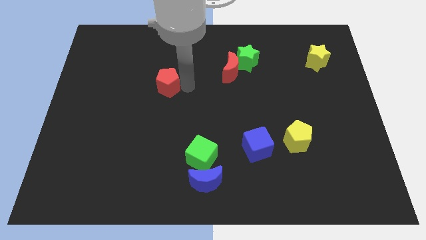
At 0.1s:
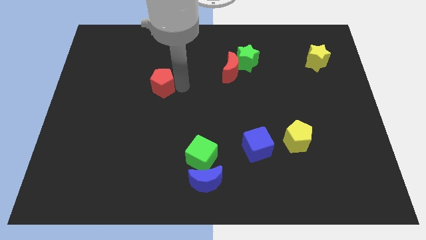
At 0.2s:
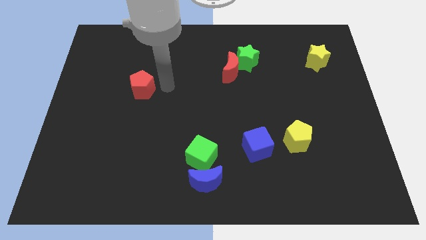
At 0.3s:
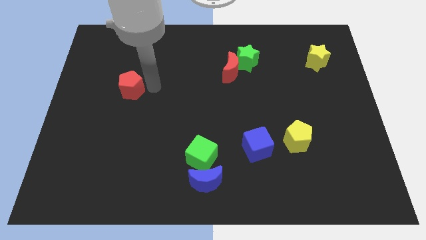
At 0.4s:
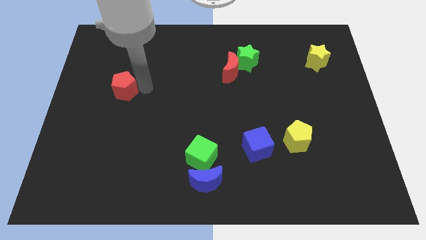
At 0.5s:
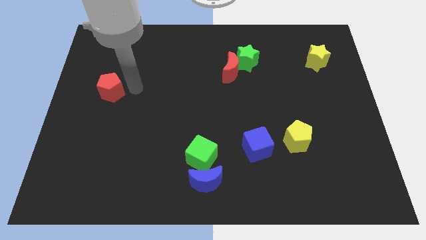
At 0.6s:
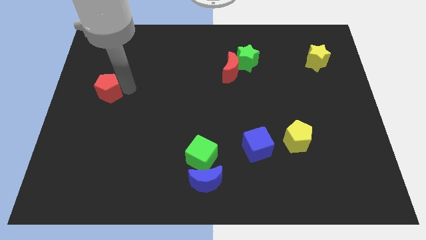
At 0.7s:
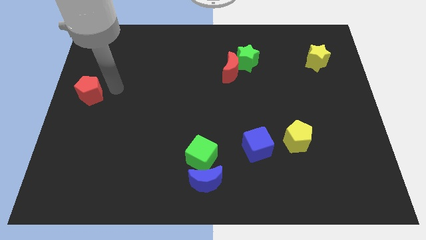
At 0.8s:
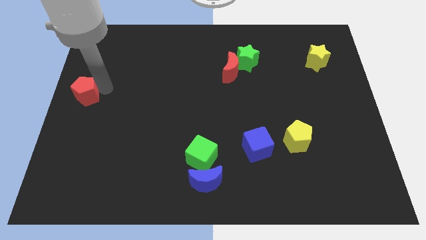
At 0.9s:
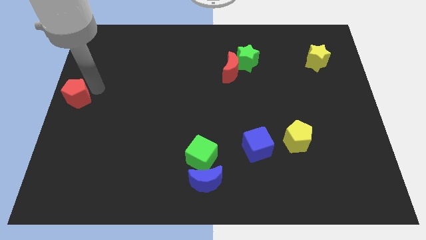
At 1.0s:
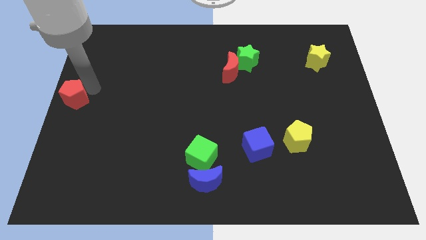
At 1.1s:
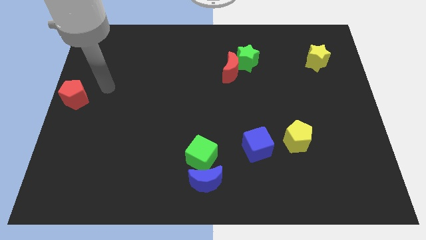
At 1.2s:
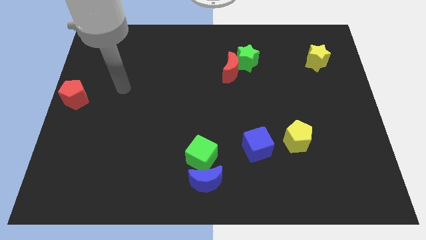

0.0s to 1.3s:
place red crescent towards left middle end of the board

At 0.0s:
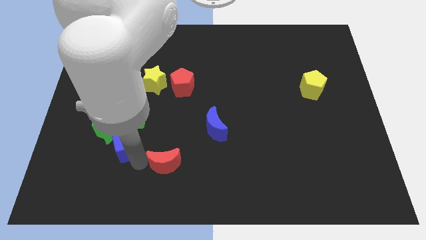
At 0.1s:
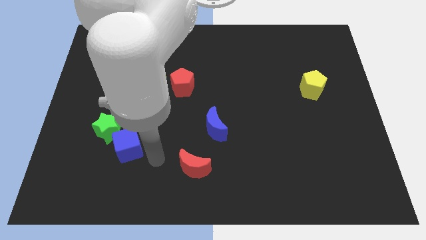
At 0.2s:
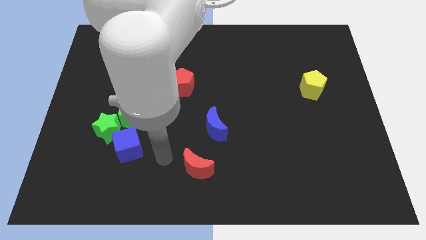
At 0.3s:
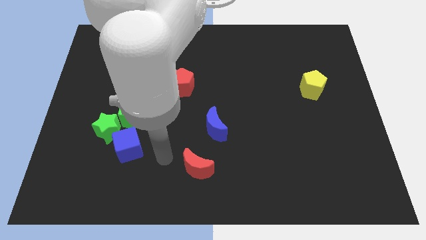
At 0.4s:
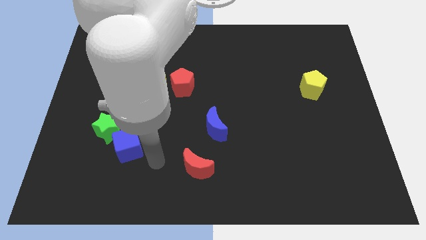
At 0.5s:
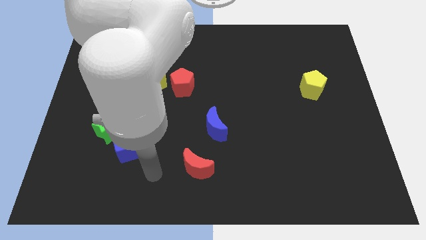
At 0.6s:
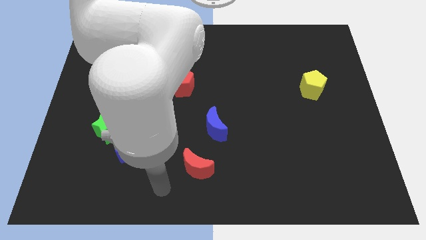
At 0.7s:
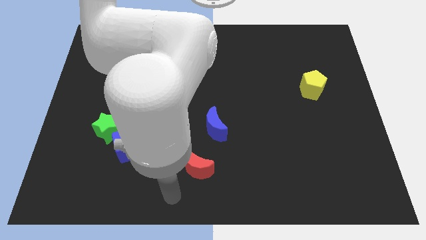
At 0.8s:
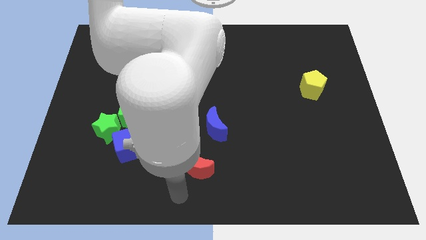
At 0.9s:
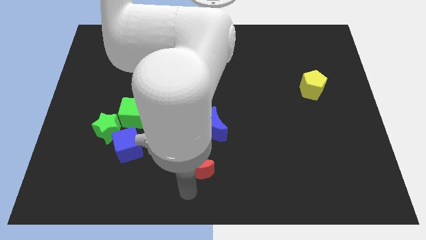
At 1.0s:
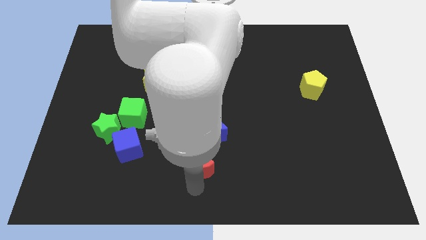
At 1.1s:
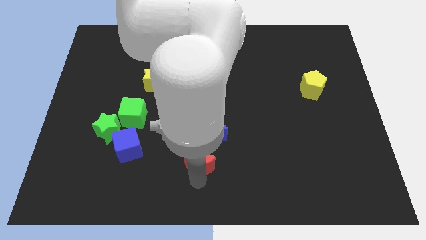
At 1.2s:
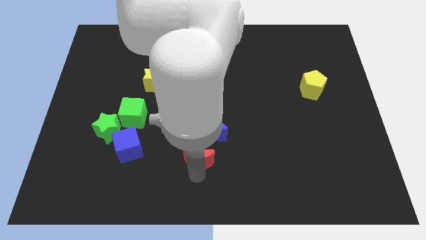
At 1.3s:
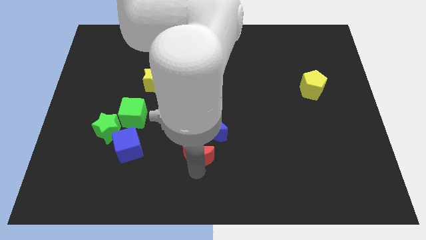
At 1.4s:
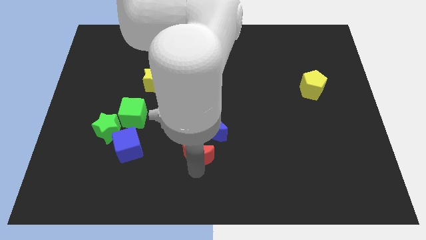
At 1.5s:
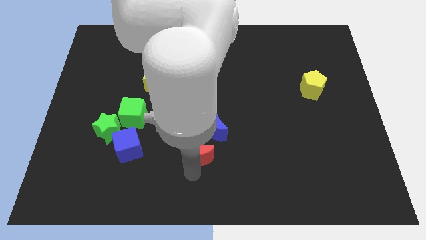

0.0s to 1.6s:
push the red crescent towards blue crescent

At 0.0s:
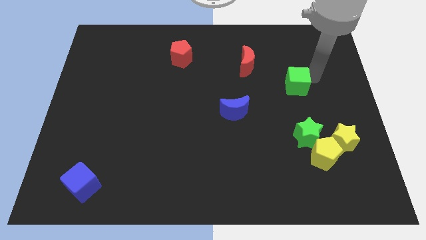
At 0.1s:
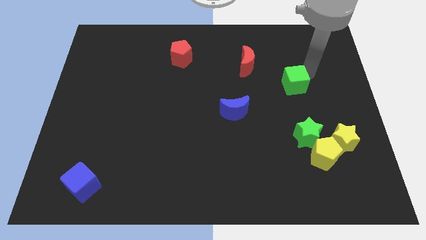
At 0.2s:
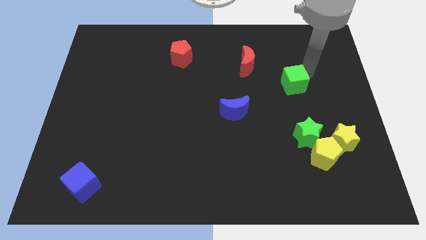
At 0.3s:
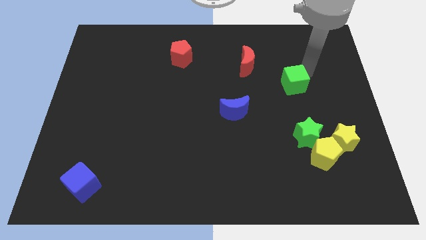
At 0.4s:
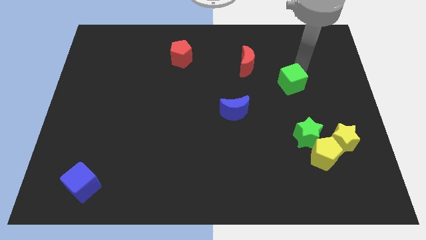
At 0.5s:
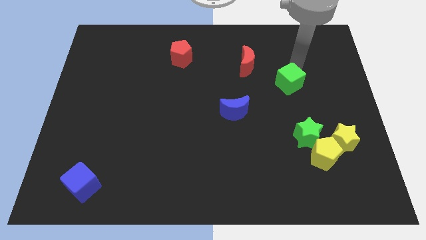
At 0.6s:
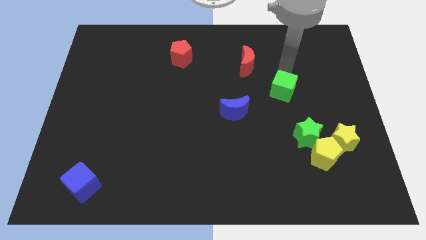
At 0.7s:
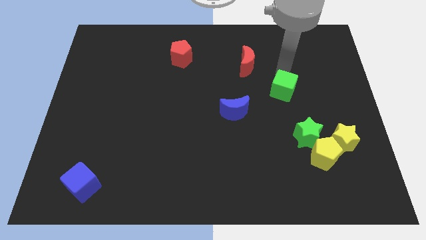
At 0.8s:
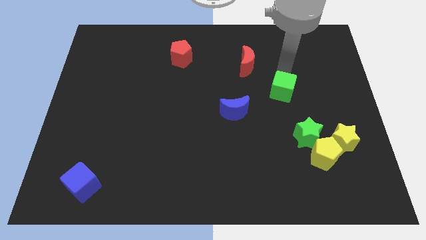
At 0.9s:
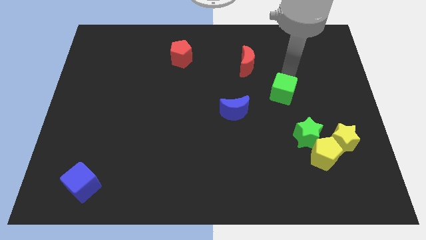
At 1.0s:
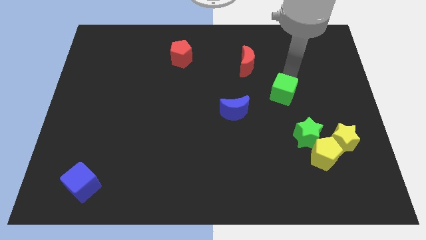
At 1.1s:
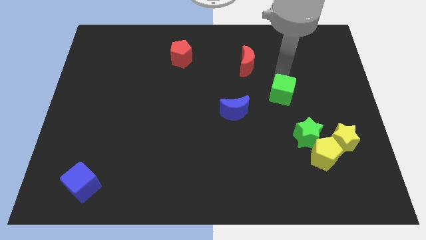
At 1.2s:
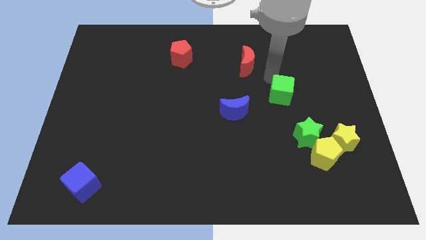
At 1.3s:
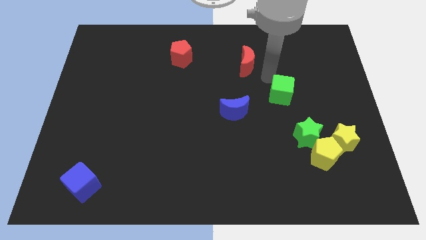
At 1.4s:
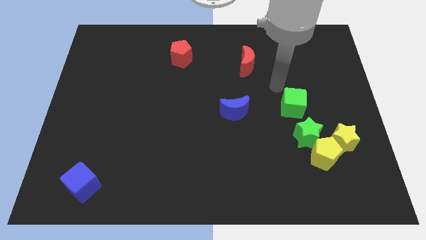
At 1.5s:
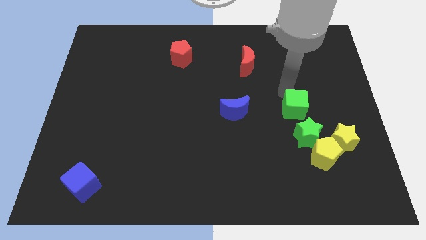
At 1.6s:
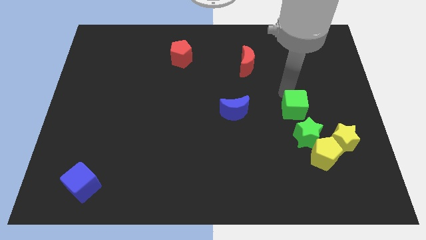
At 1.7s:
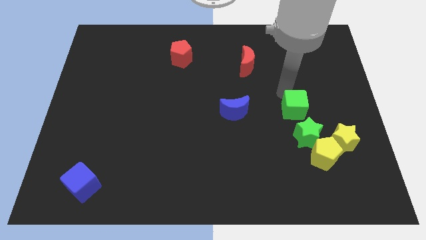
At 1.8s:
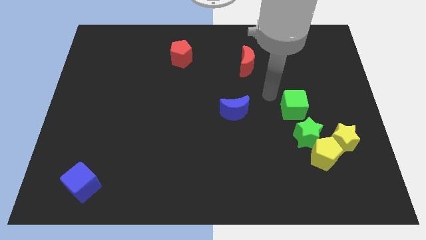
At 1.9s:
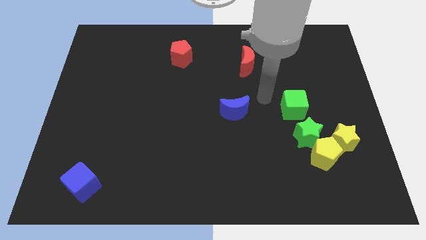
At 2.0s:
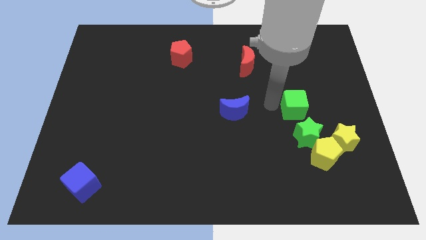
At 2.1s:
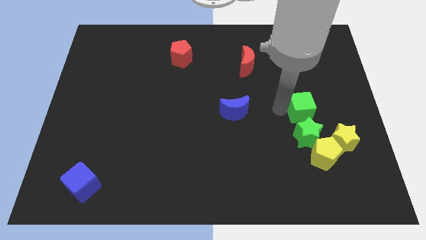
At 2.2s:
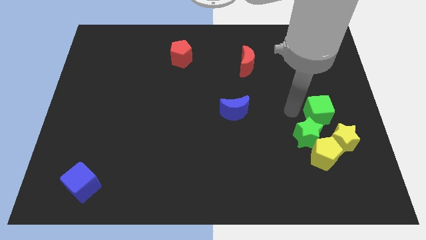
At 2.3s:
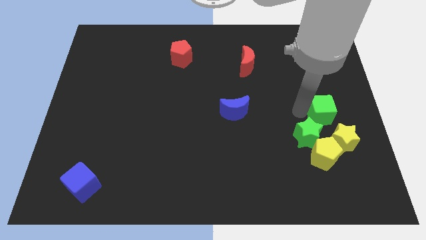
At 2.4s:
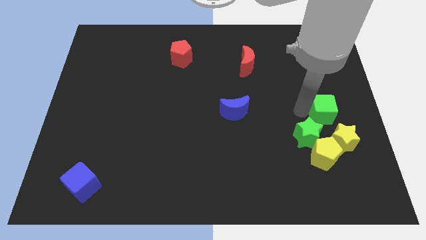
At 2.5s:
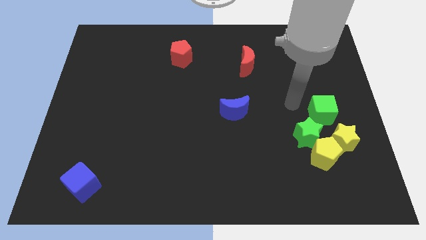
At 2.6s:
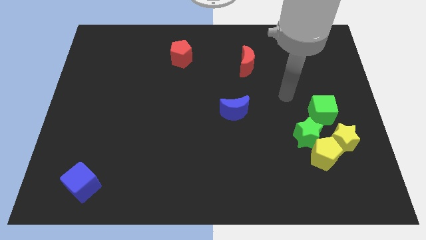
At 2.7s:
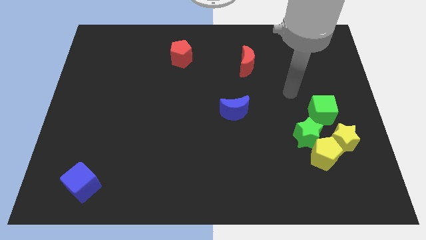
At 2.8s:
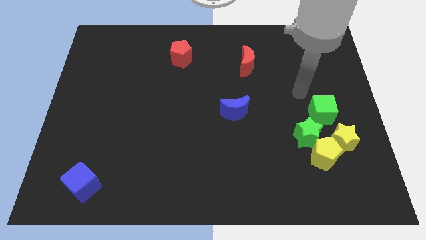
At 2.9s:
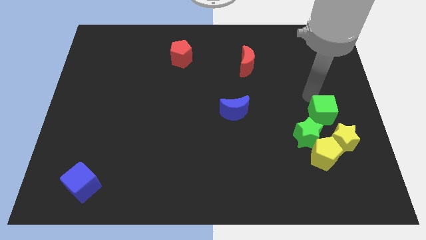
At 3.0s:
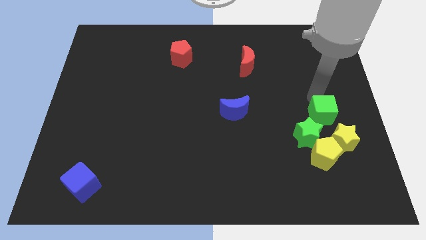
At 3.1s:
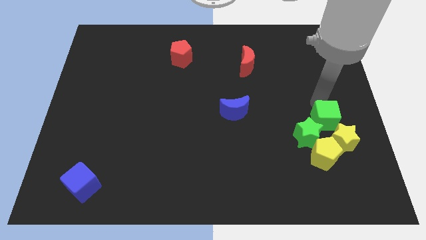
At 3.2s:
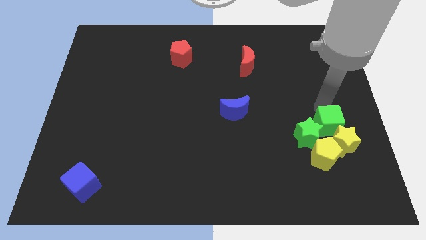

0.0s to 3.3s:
place the arm above the green cube

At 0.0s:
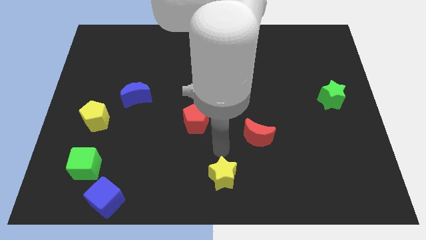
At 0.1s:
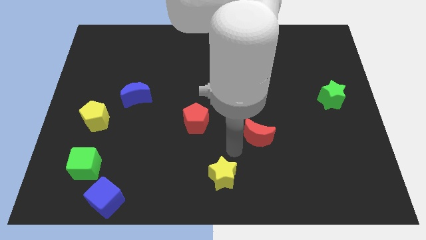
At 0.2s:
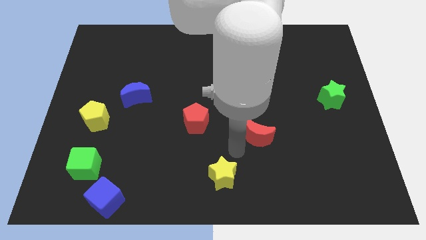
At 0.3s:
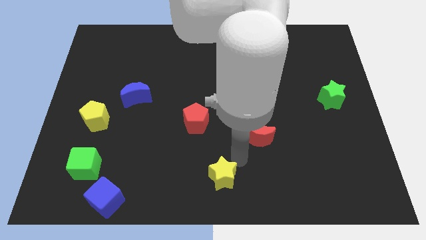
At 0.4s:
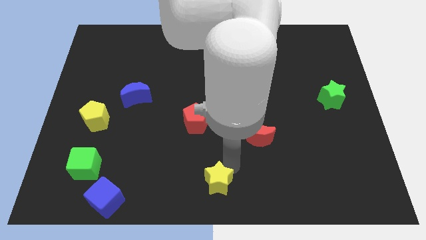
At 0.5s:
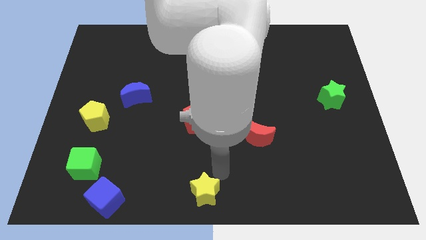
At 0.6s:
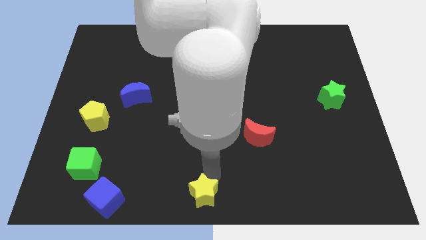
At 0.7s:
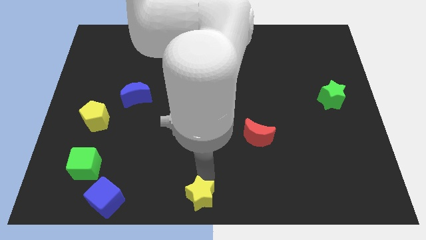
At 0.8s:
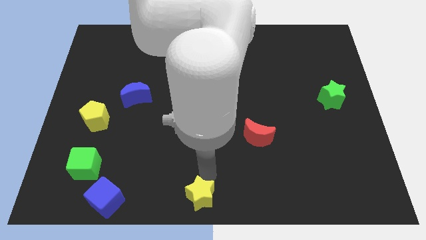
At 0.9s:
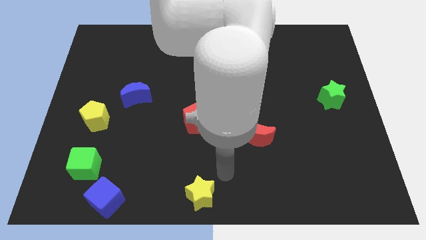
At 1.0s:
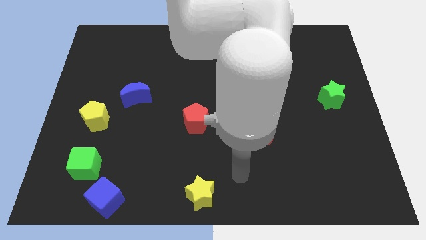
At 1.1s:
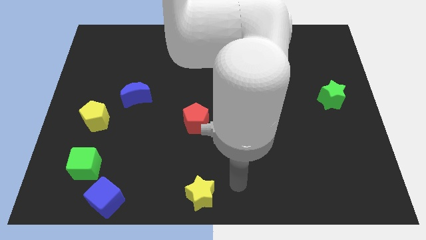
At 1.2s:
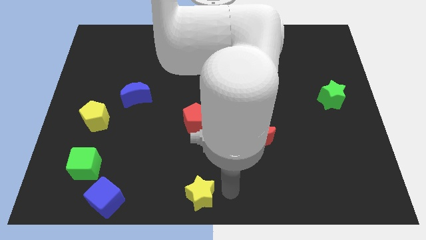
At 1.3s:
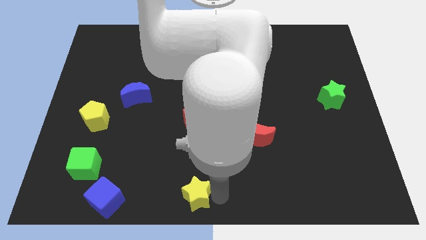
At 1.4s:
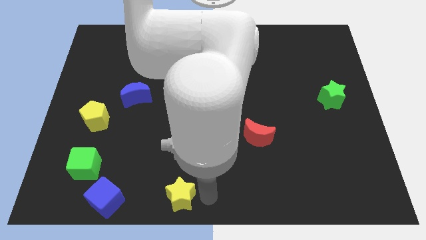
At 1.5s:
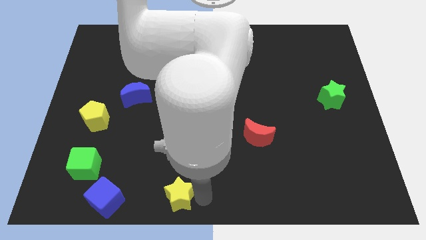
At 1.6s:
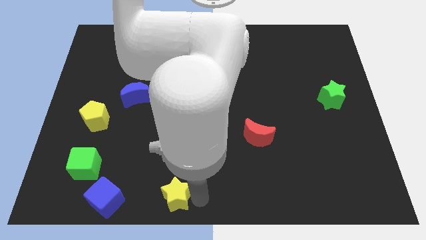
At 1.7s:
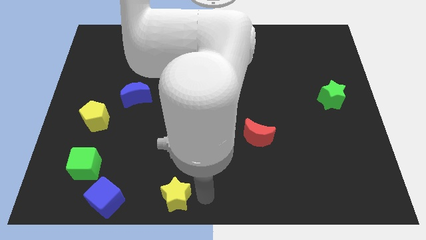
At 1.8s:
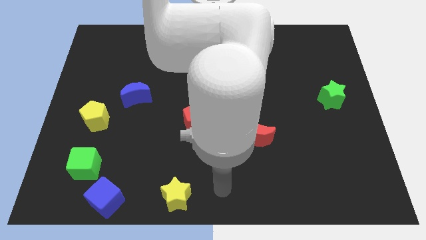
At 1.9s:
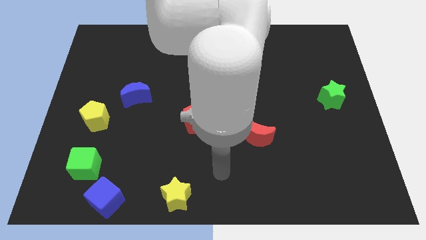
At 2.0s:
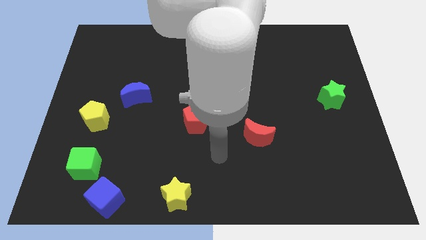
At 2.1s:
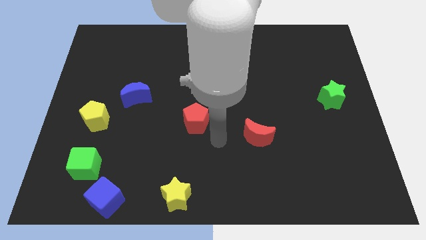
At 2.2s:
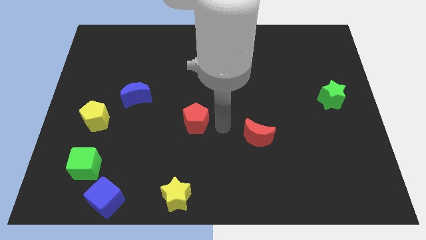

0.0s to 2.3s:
slightly push the yellow star towards the blue cube

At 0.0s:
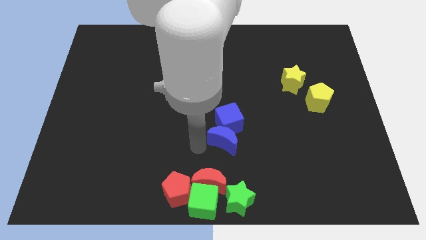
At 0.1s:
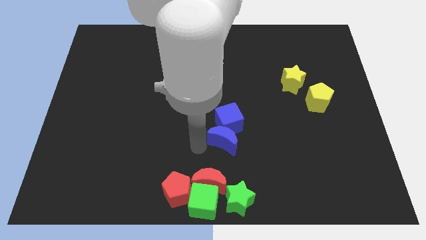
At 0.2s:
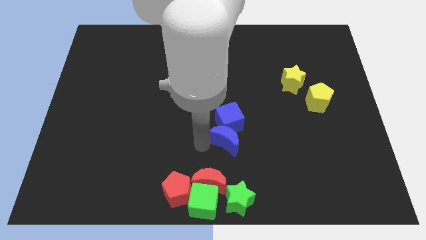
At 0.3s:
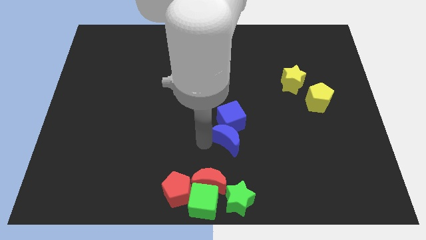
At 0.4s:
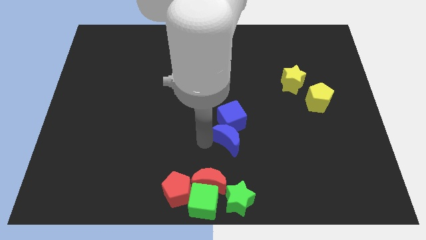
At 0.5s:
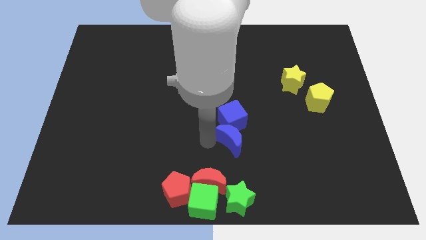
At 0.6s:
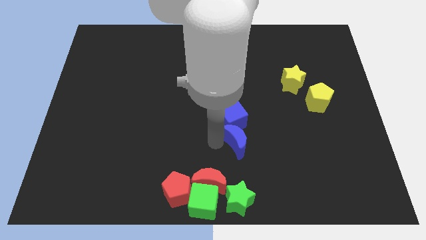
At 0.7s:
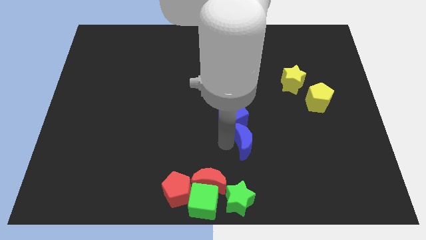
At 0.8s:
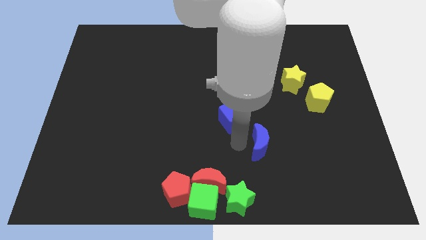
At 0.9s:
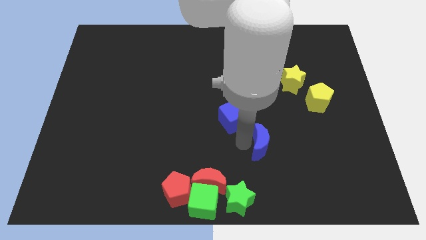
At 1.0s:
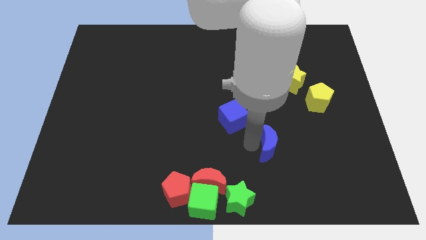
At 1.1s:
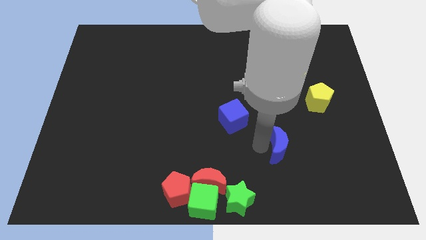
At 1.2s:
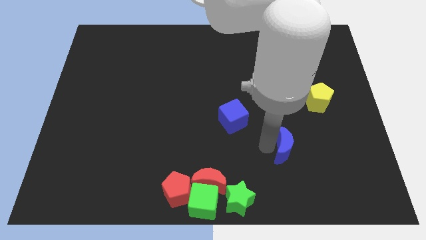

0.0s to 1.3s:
move the blue crescent slightly to the right side
